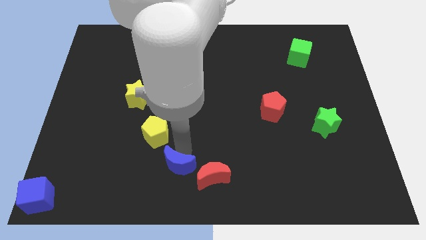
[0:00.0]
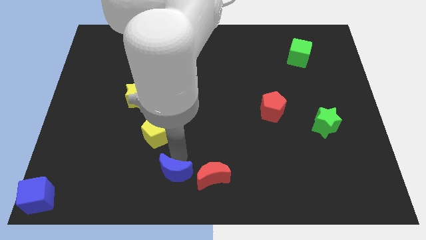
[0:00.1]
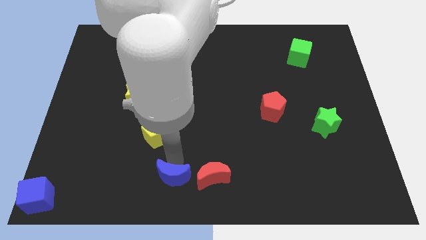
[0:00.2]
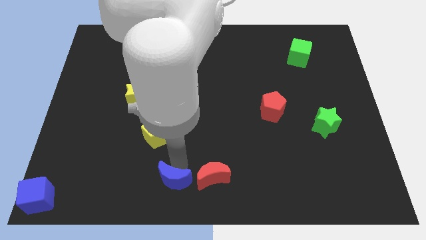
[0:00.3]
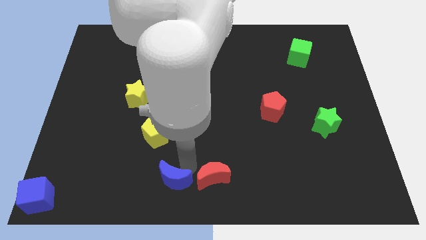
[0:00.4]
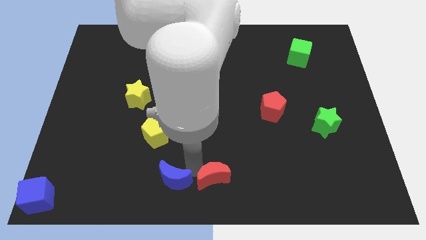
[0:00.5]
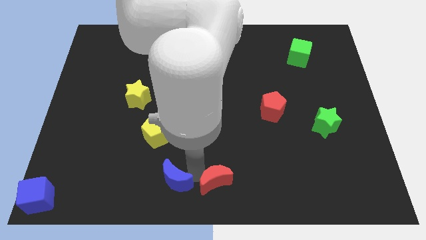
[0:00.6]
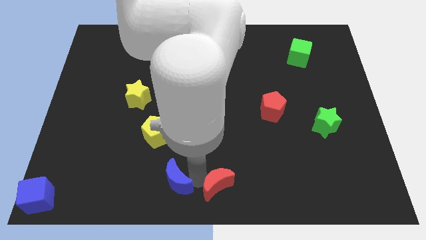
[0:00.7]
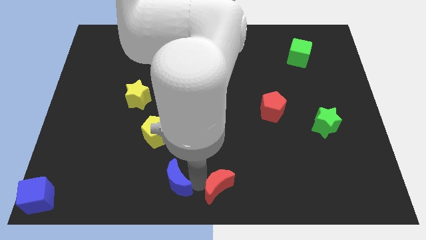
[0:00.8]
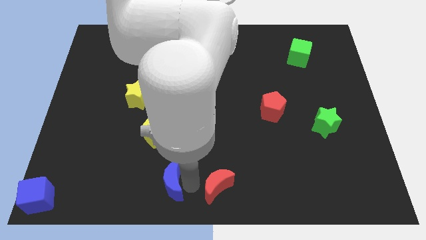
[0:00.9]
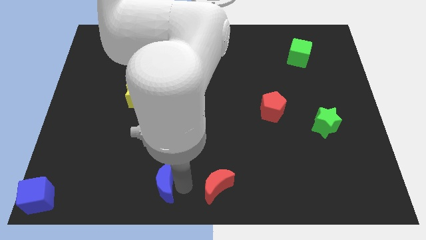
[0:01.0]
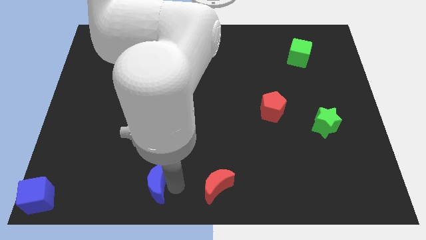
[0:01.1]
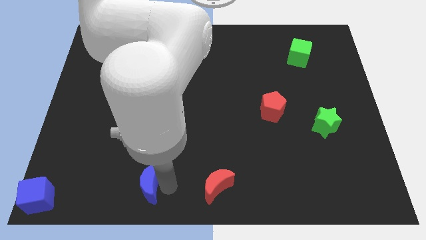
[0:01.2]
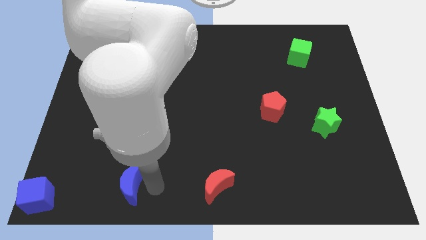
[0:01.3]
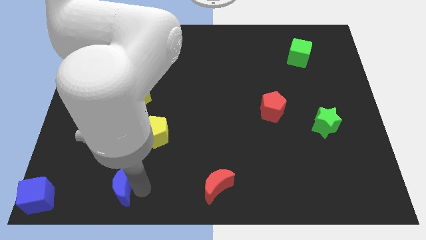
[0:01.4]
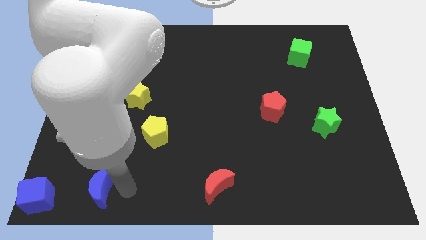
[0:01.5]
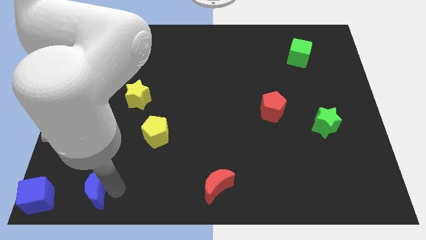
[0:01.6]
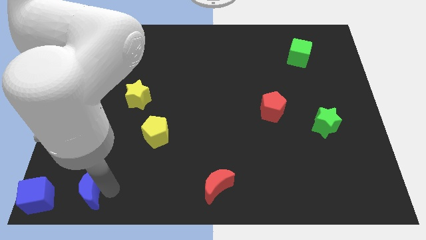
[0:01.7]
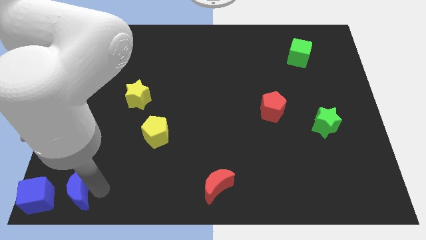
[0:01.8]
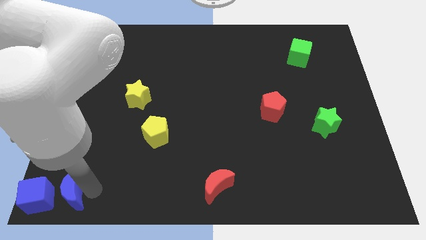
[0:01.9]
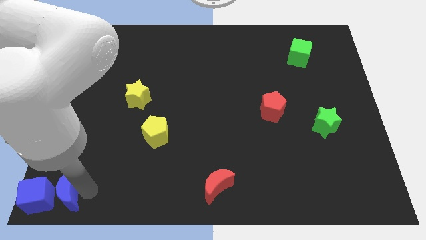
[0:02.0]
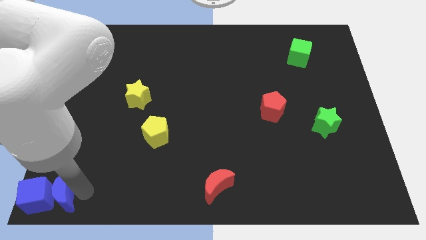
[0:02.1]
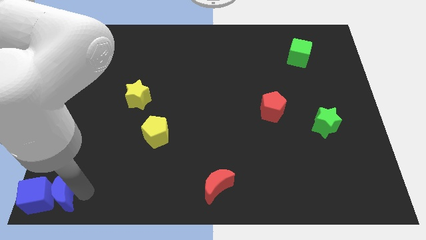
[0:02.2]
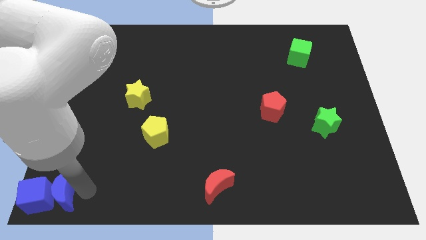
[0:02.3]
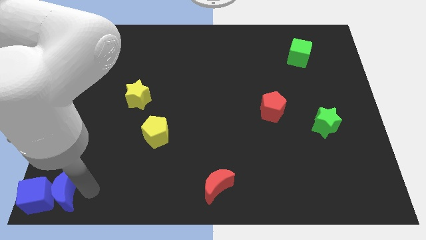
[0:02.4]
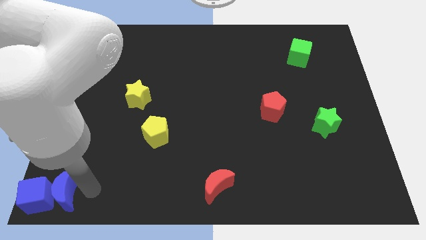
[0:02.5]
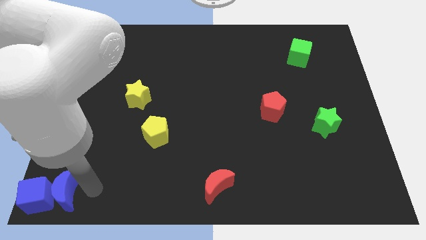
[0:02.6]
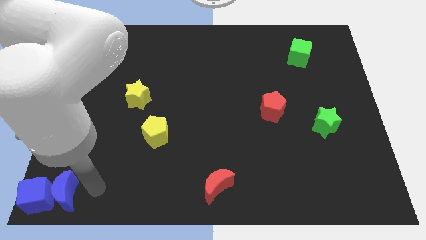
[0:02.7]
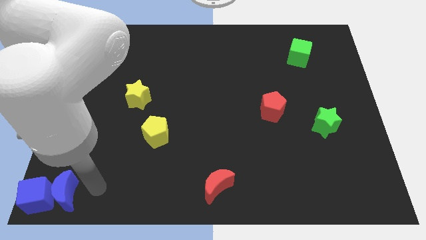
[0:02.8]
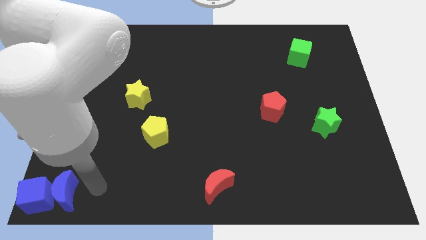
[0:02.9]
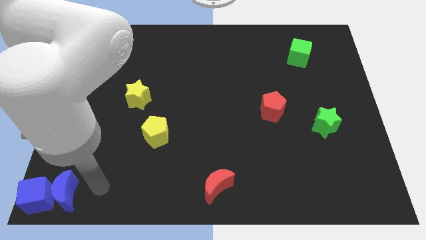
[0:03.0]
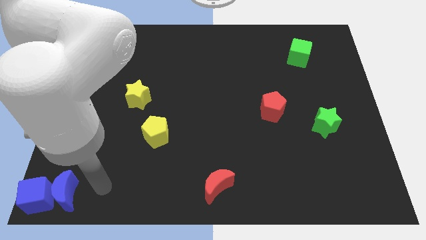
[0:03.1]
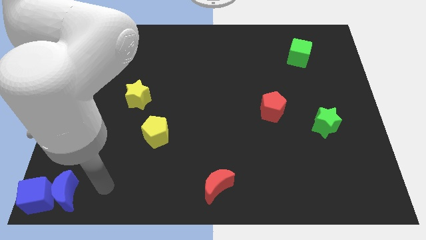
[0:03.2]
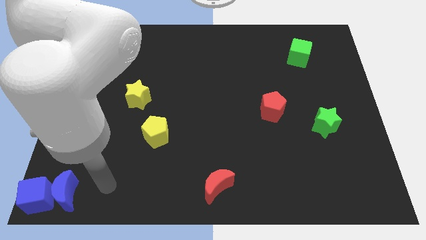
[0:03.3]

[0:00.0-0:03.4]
push blue crescent into blue cube

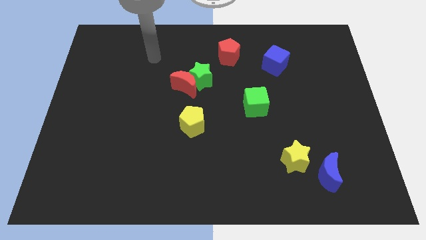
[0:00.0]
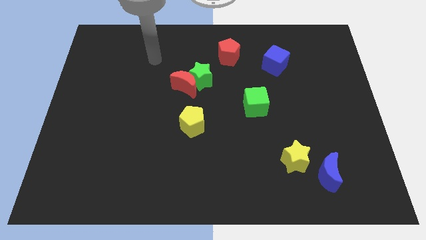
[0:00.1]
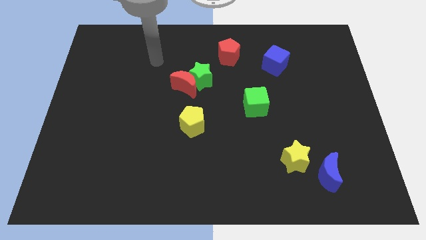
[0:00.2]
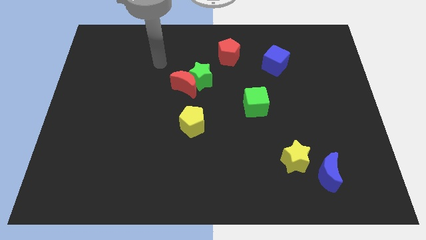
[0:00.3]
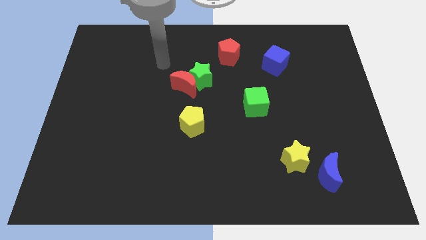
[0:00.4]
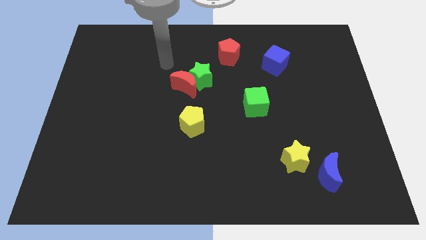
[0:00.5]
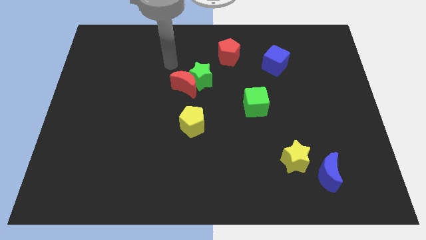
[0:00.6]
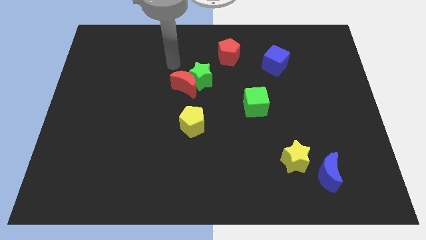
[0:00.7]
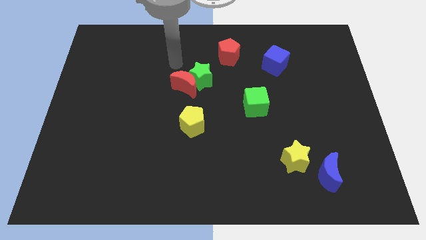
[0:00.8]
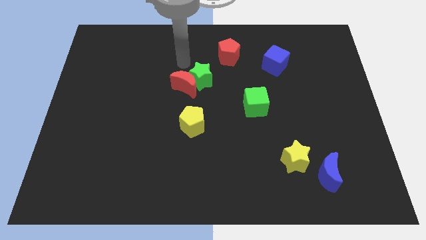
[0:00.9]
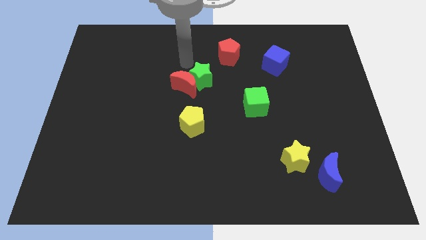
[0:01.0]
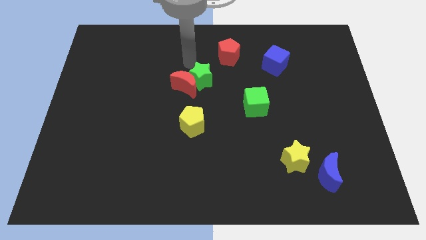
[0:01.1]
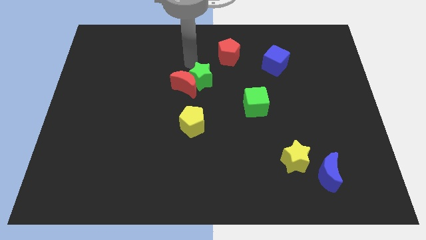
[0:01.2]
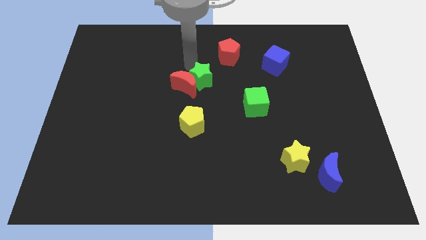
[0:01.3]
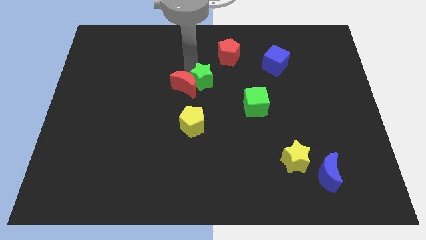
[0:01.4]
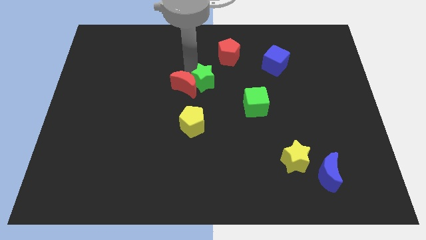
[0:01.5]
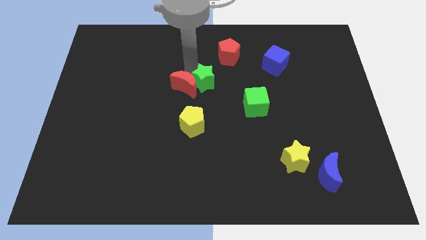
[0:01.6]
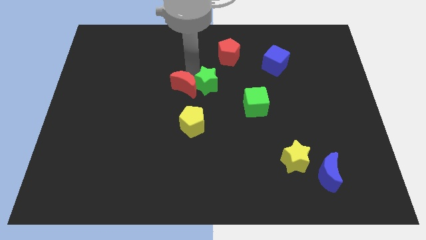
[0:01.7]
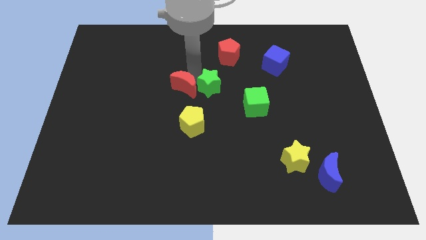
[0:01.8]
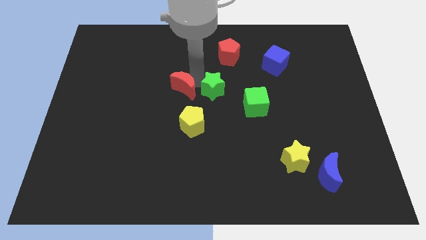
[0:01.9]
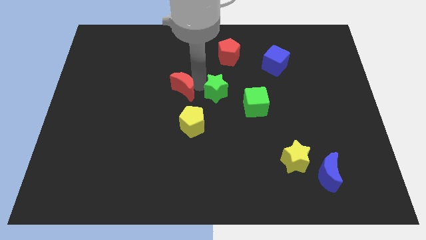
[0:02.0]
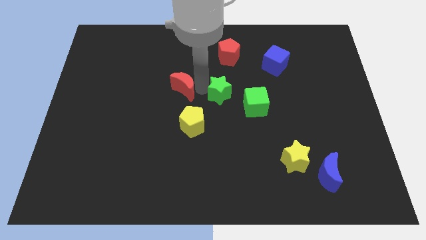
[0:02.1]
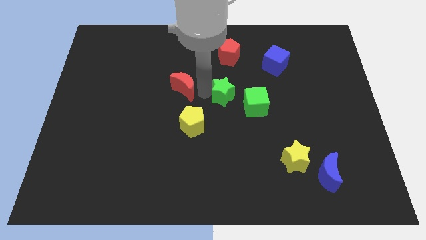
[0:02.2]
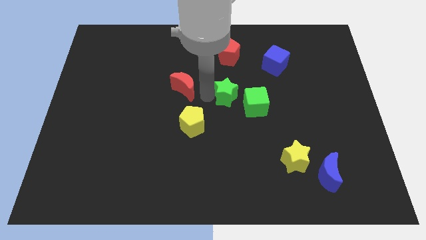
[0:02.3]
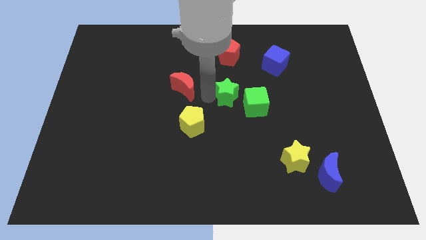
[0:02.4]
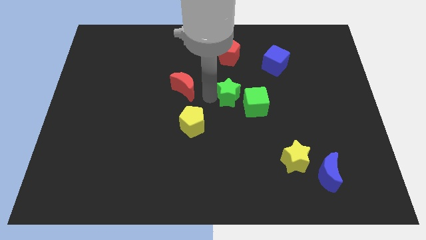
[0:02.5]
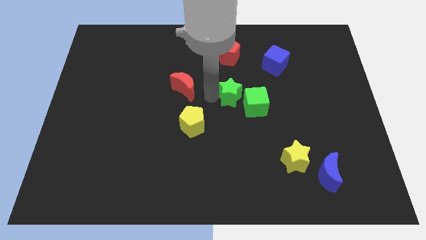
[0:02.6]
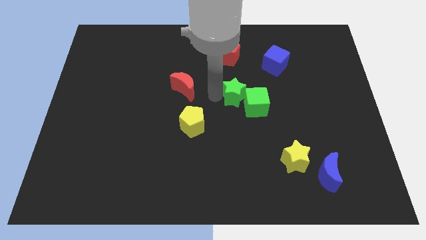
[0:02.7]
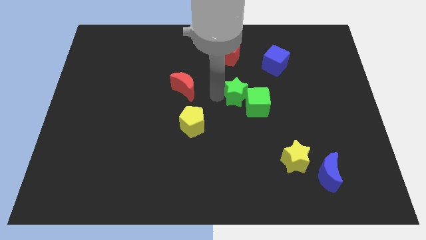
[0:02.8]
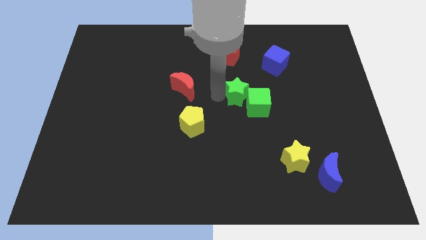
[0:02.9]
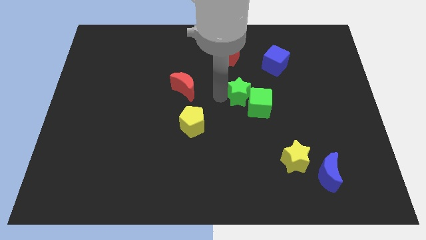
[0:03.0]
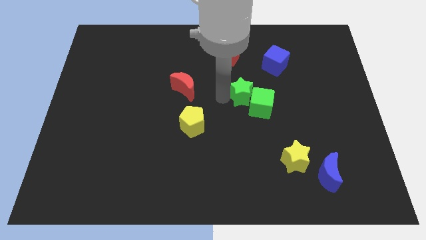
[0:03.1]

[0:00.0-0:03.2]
move the green star into the green cube

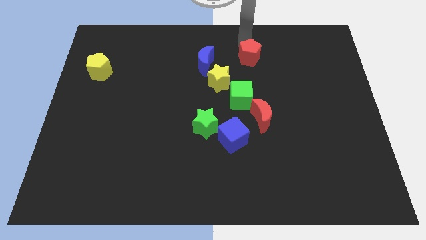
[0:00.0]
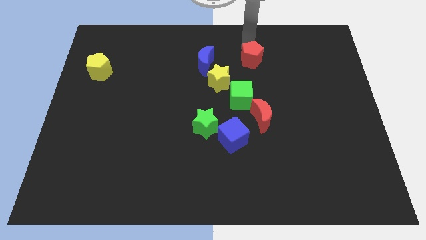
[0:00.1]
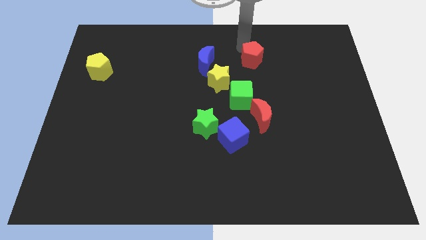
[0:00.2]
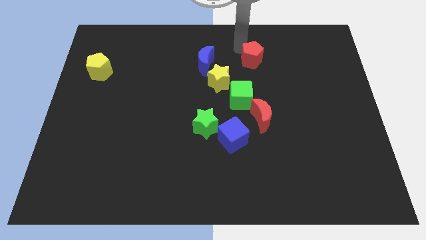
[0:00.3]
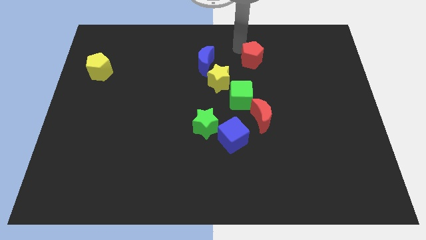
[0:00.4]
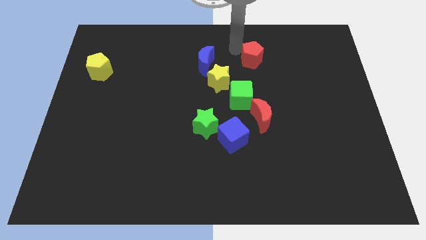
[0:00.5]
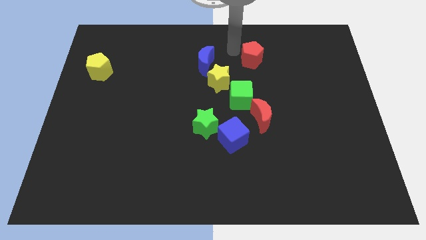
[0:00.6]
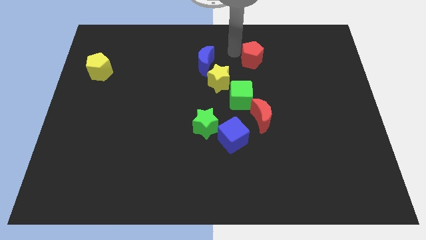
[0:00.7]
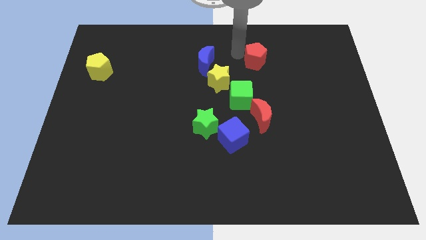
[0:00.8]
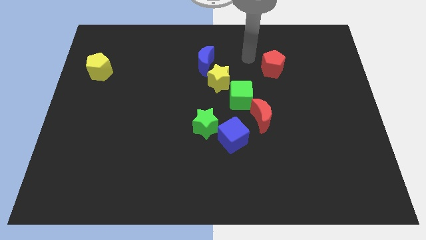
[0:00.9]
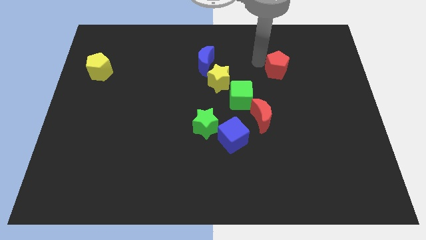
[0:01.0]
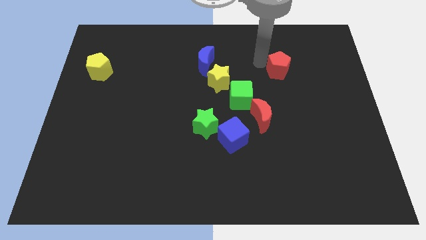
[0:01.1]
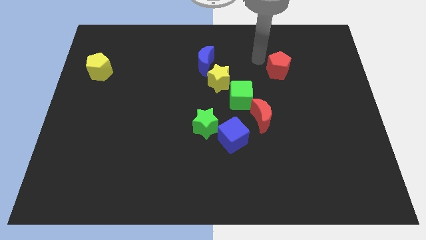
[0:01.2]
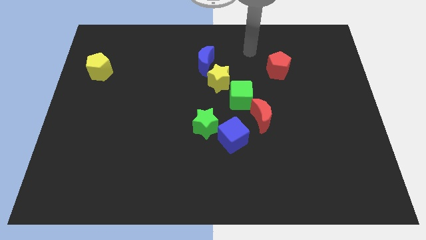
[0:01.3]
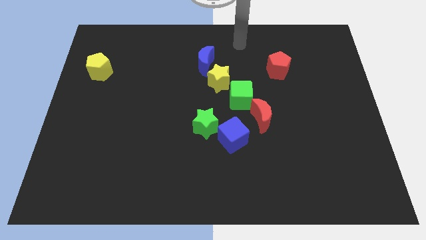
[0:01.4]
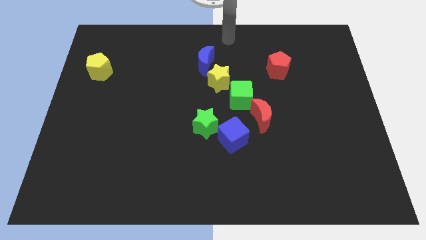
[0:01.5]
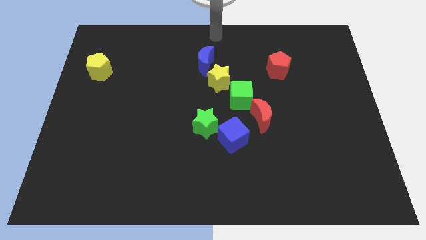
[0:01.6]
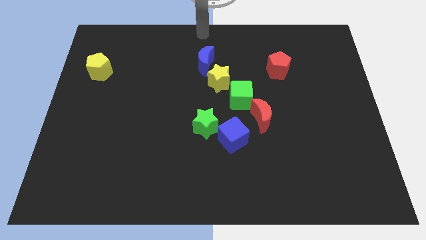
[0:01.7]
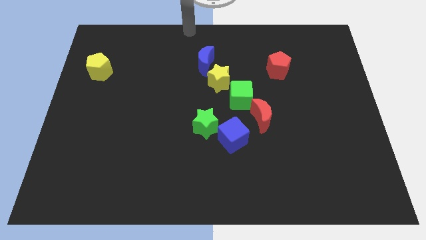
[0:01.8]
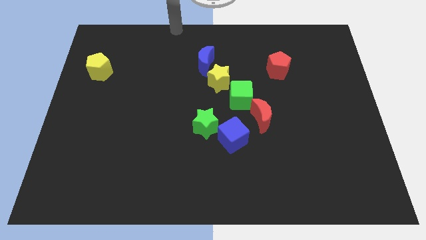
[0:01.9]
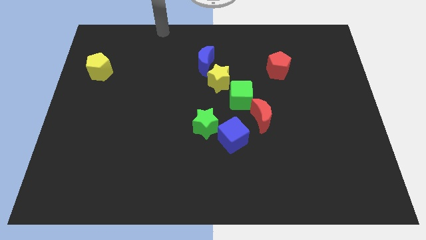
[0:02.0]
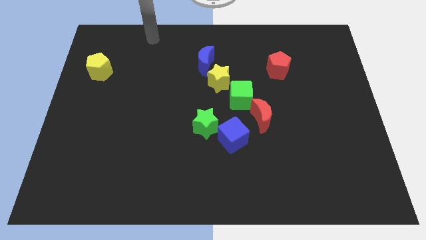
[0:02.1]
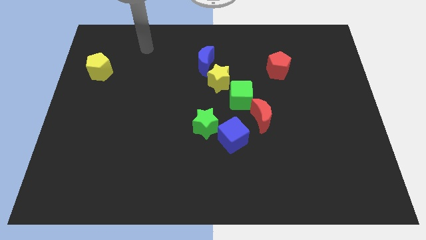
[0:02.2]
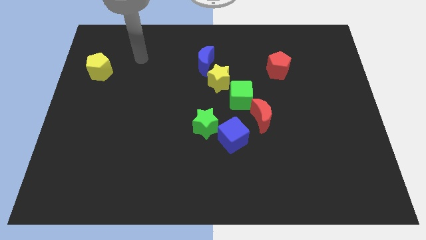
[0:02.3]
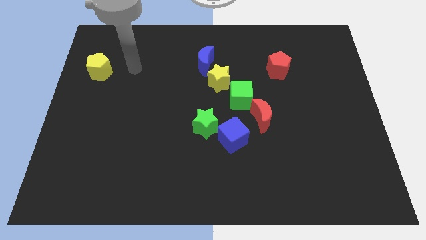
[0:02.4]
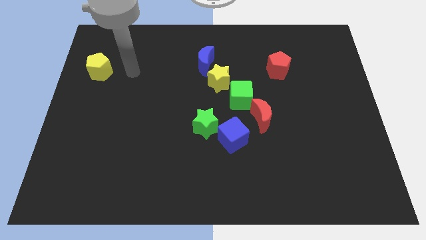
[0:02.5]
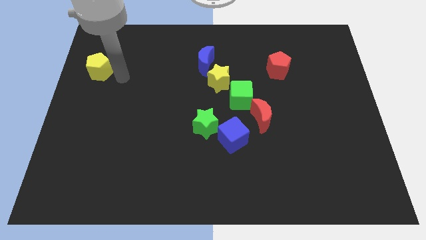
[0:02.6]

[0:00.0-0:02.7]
place red pentagon parallel to blue moon
